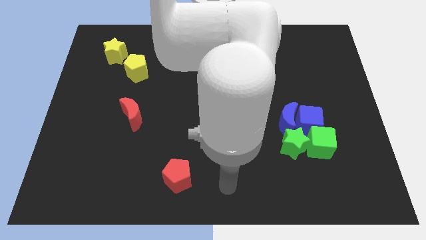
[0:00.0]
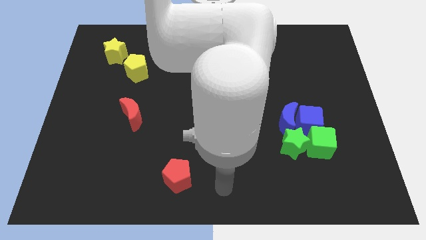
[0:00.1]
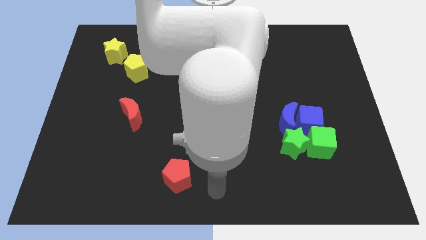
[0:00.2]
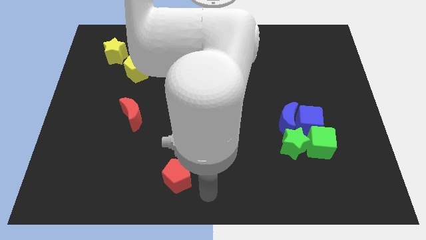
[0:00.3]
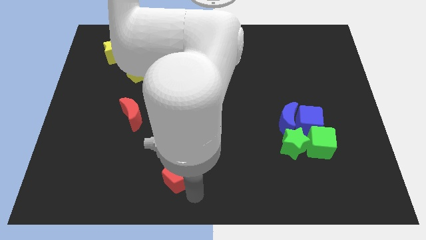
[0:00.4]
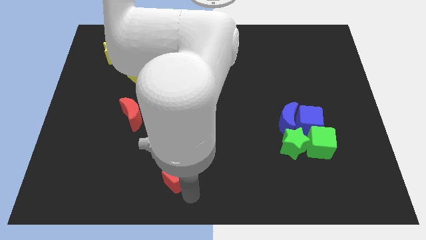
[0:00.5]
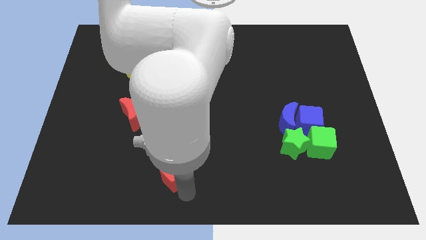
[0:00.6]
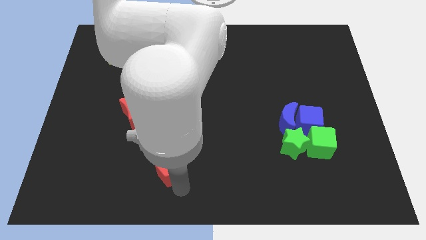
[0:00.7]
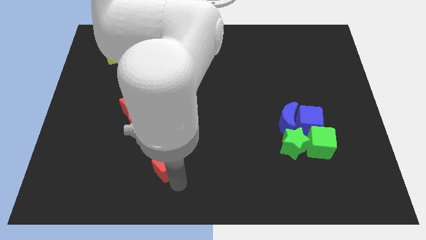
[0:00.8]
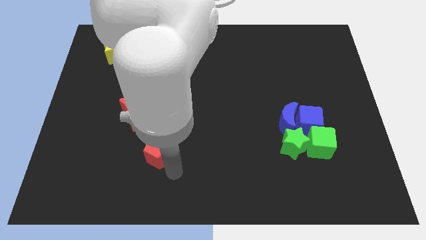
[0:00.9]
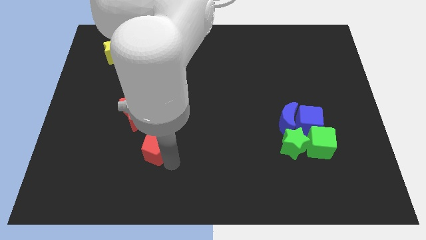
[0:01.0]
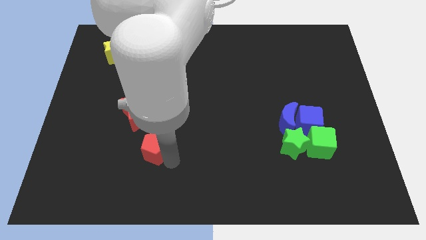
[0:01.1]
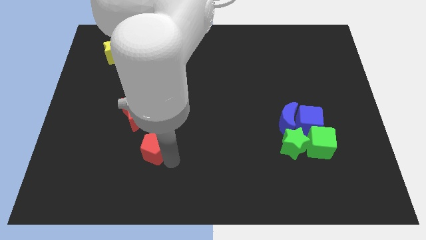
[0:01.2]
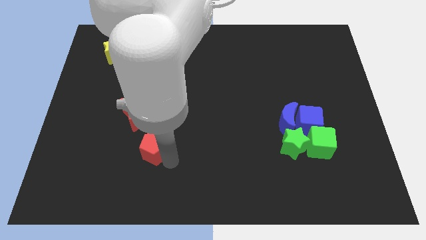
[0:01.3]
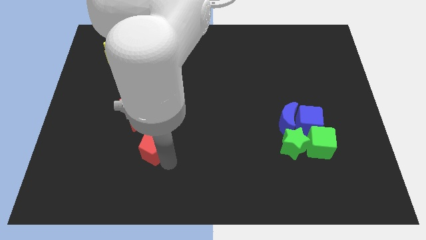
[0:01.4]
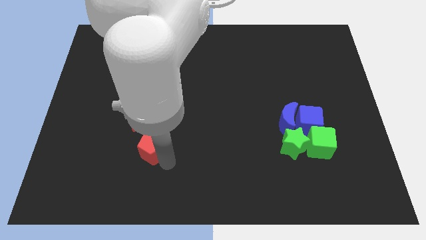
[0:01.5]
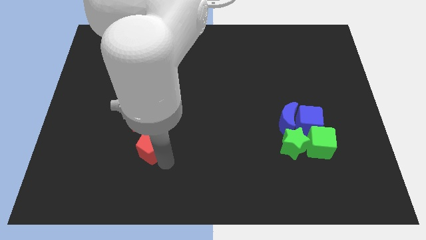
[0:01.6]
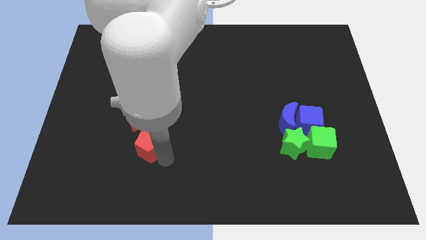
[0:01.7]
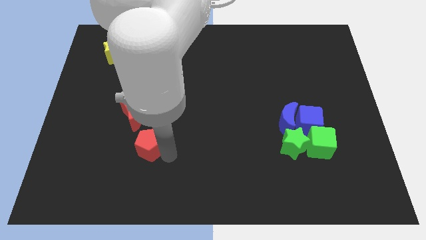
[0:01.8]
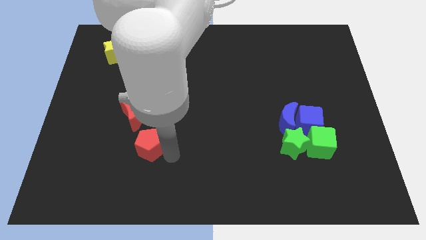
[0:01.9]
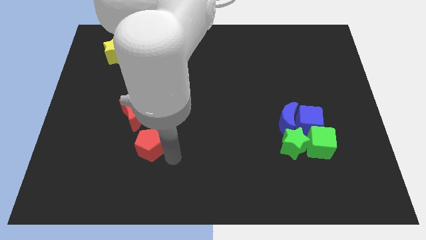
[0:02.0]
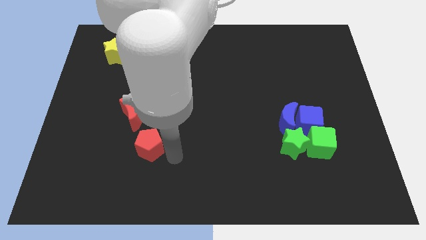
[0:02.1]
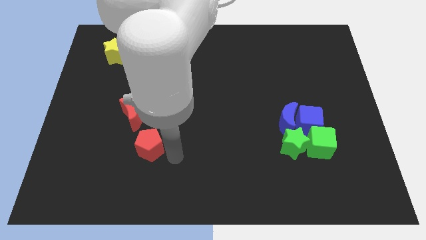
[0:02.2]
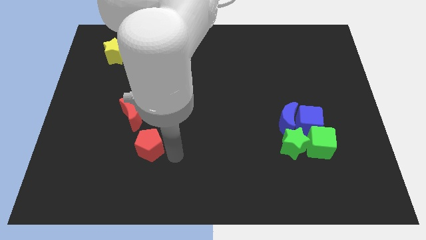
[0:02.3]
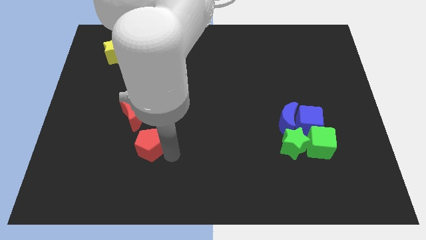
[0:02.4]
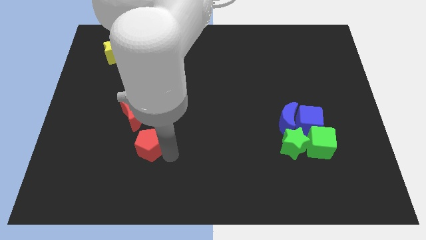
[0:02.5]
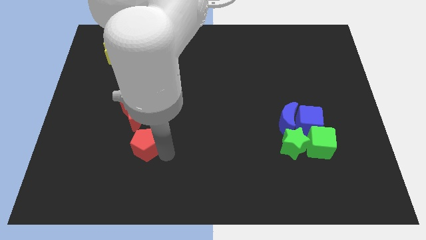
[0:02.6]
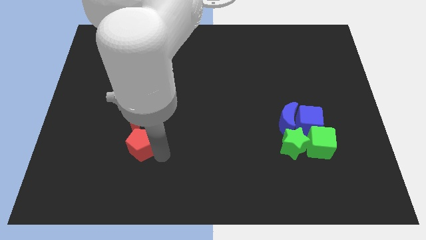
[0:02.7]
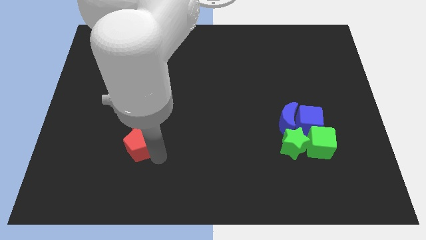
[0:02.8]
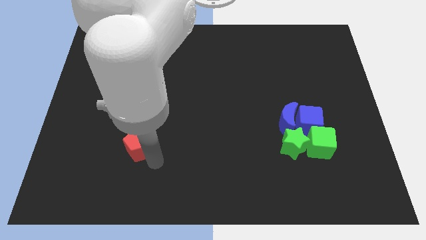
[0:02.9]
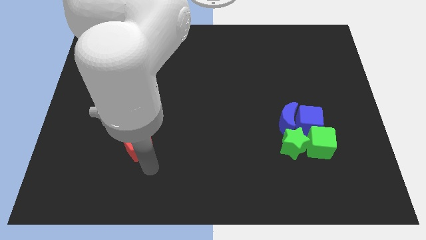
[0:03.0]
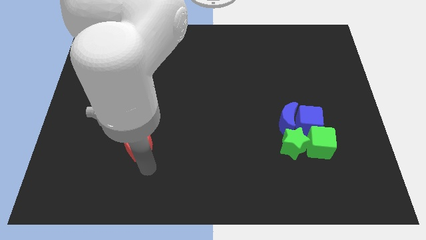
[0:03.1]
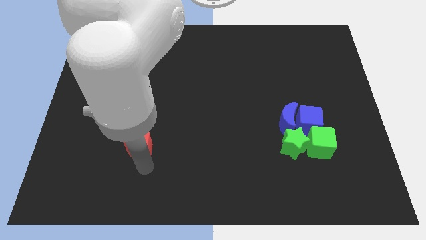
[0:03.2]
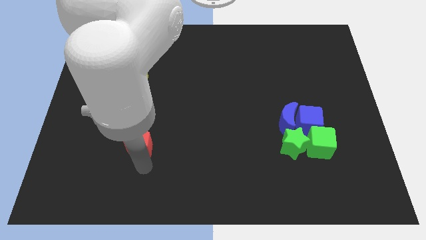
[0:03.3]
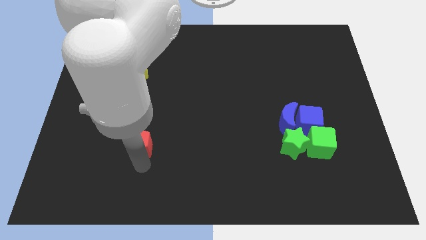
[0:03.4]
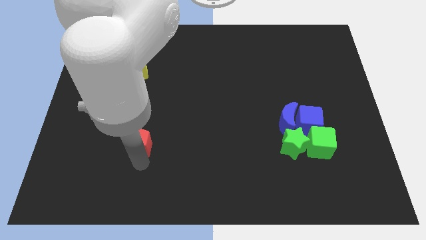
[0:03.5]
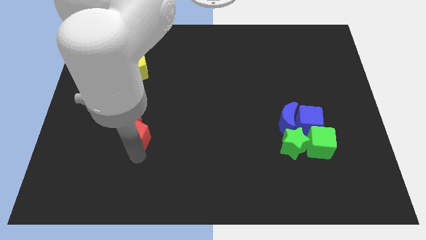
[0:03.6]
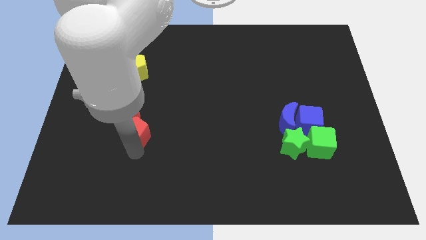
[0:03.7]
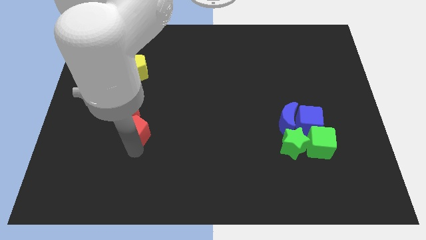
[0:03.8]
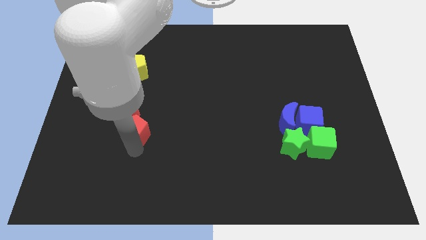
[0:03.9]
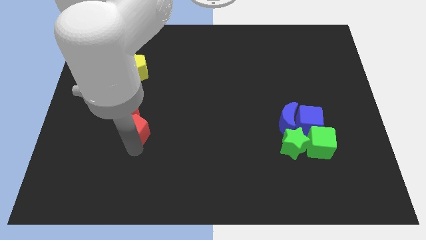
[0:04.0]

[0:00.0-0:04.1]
drag the red pentagon into the red moon

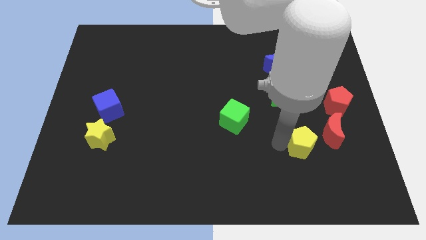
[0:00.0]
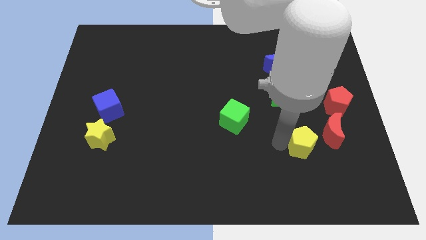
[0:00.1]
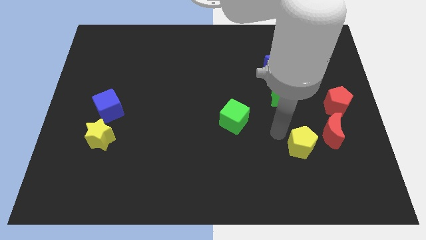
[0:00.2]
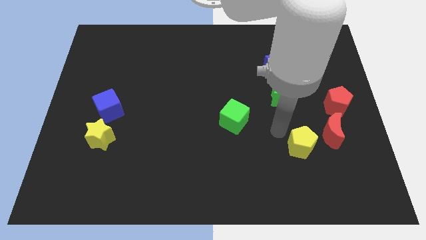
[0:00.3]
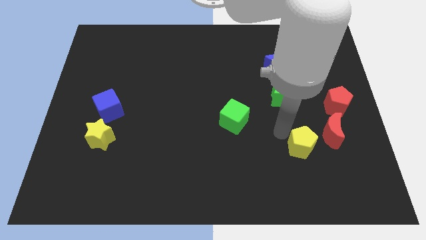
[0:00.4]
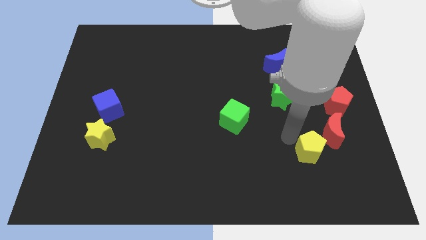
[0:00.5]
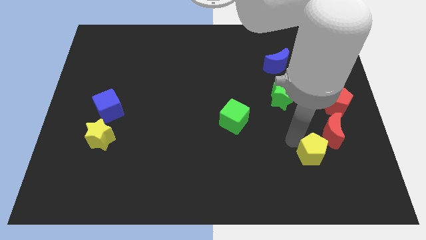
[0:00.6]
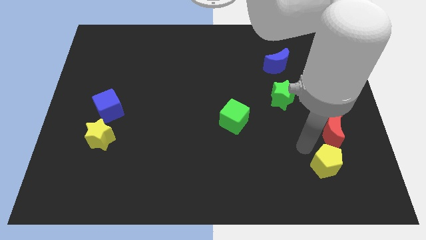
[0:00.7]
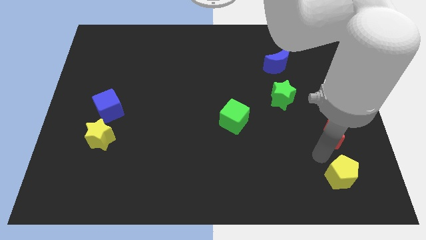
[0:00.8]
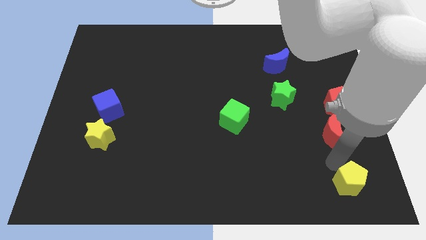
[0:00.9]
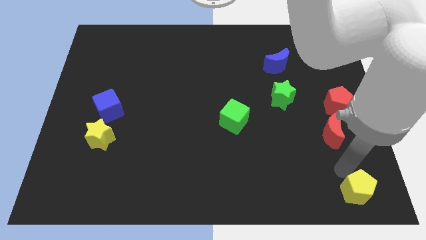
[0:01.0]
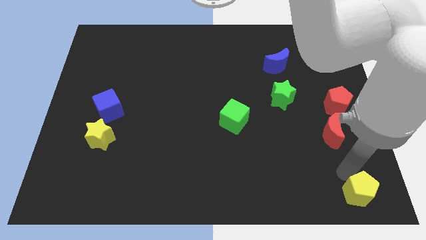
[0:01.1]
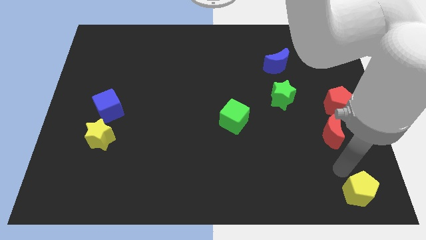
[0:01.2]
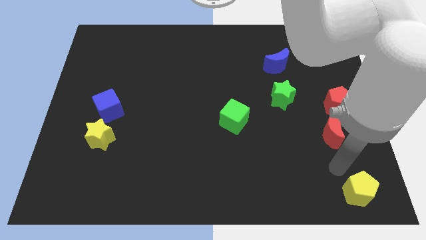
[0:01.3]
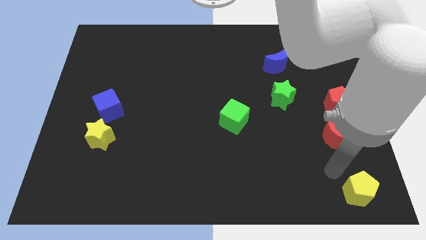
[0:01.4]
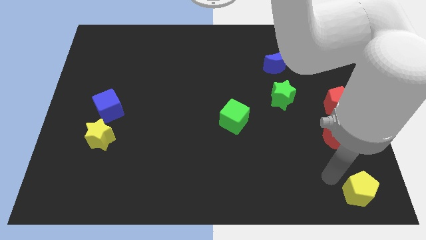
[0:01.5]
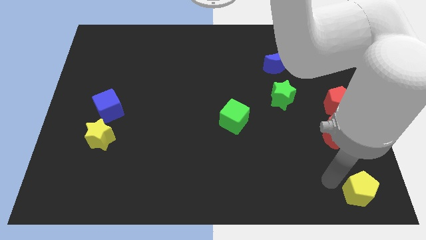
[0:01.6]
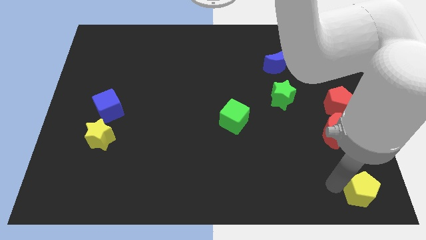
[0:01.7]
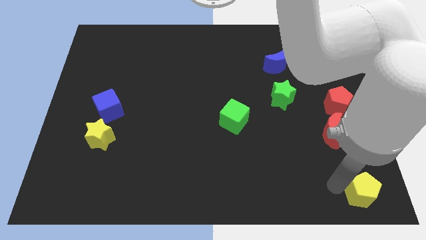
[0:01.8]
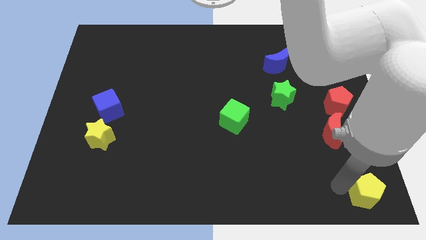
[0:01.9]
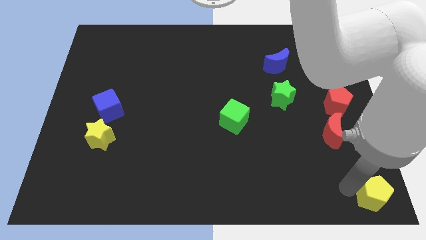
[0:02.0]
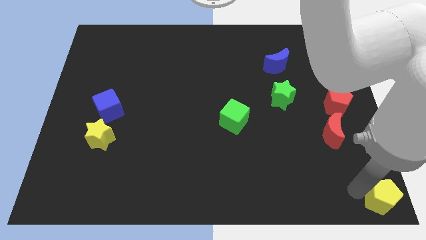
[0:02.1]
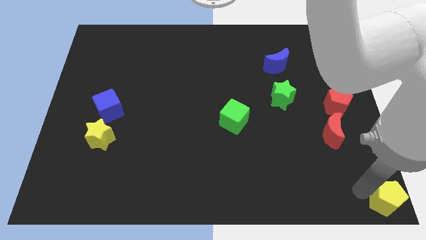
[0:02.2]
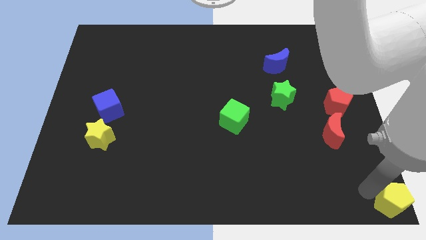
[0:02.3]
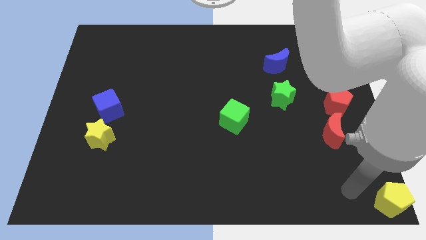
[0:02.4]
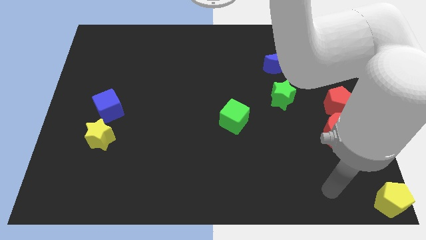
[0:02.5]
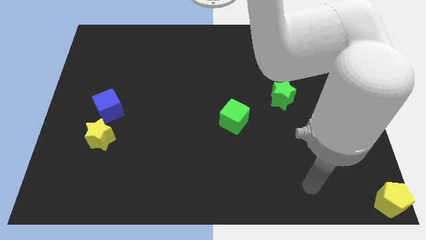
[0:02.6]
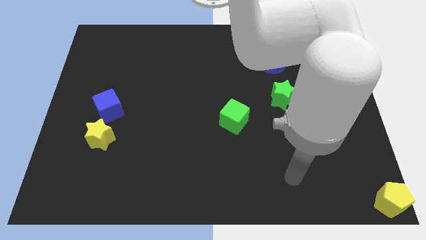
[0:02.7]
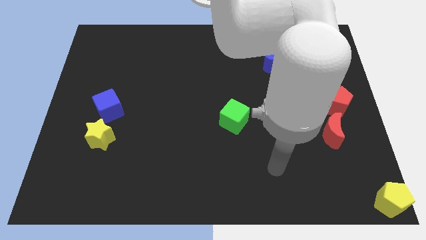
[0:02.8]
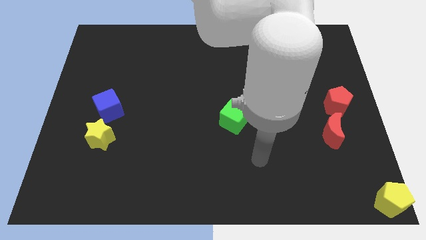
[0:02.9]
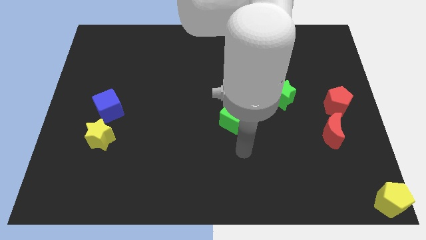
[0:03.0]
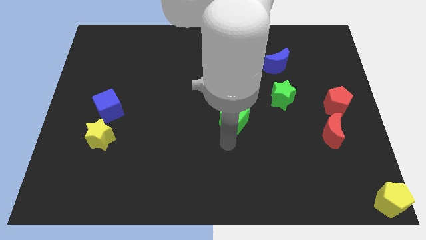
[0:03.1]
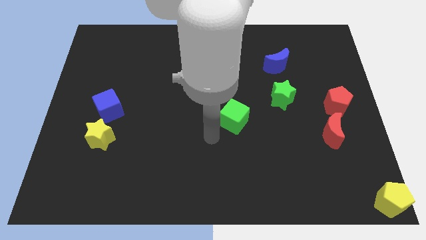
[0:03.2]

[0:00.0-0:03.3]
slide the yellow pentagon diagonally bottom right to the red moon

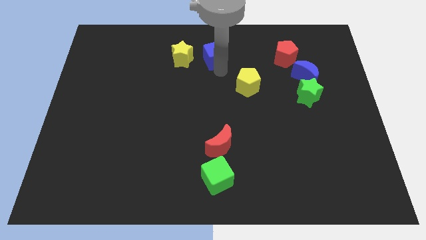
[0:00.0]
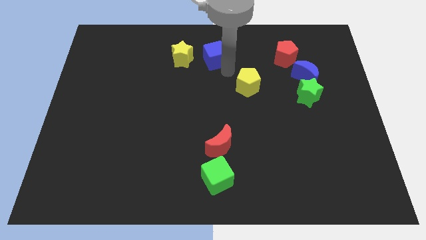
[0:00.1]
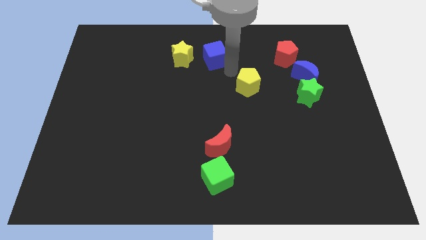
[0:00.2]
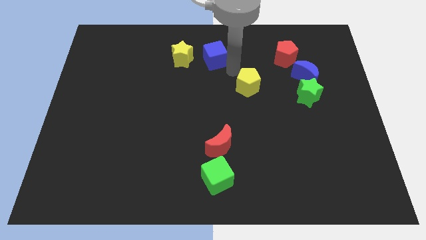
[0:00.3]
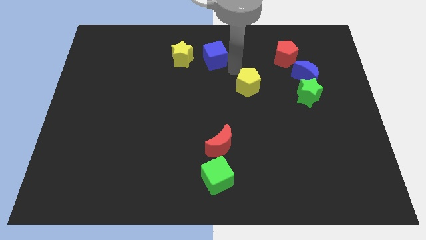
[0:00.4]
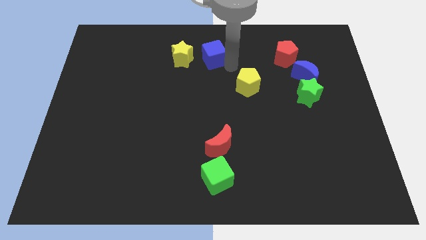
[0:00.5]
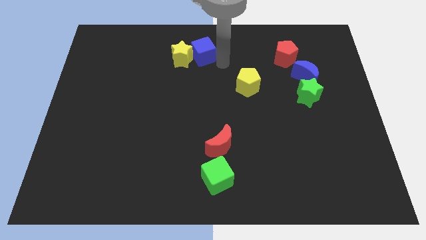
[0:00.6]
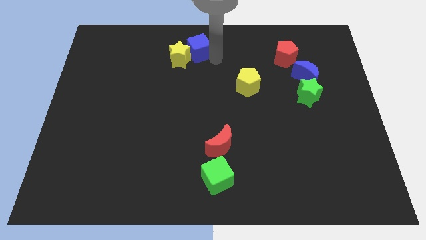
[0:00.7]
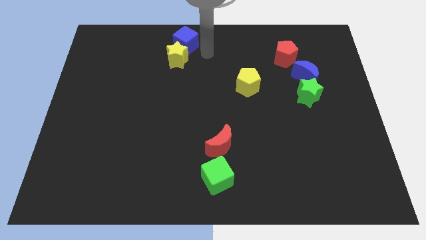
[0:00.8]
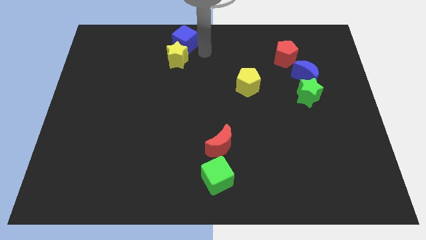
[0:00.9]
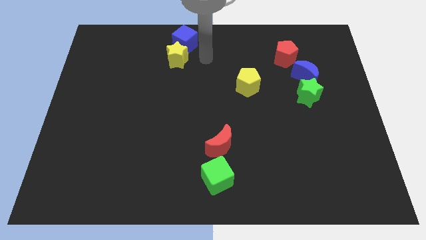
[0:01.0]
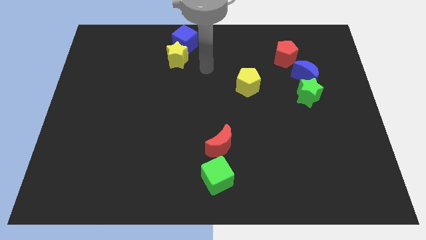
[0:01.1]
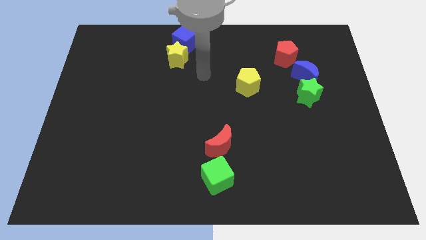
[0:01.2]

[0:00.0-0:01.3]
place the blue cube above the yellow star

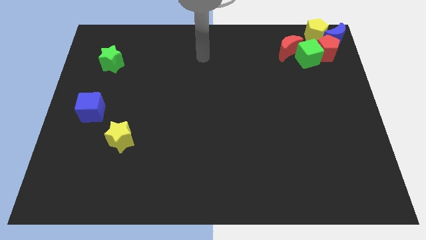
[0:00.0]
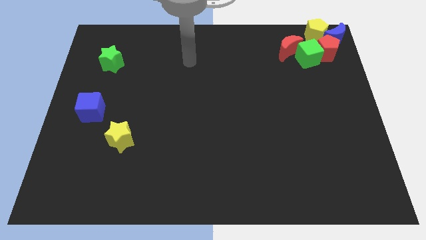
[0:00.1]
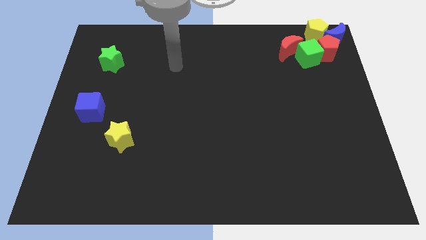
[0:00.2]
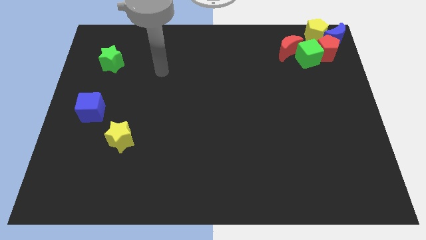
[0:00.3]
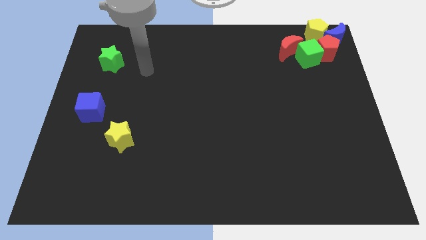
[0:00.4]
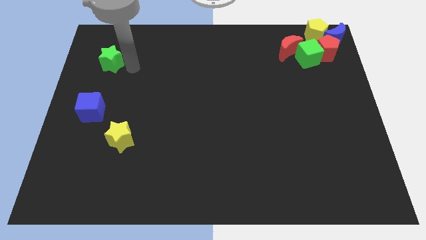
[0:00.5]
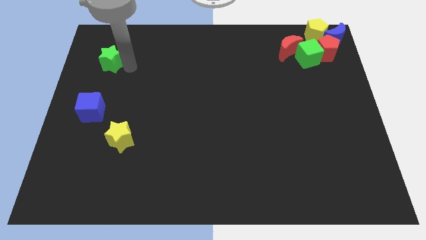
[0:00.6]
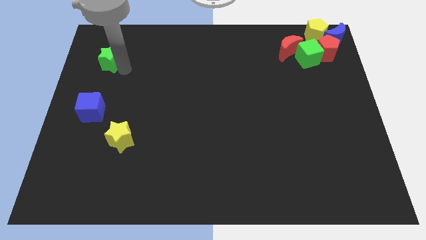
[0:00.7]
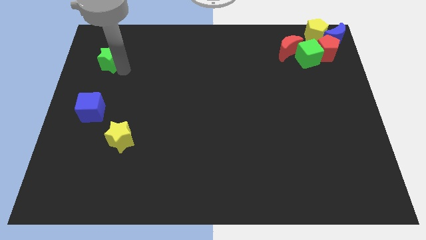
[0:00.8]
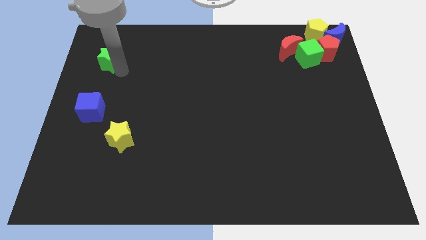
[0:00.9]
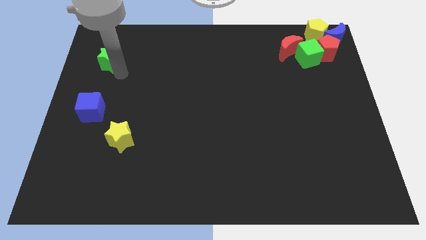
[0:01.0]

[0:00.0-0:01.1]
move your arm towards the green star
